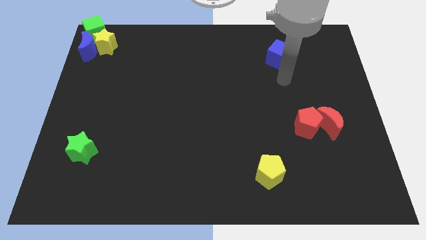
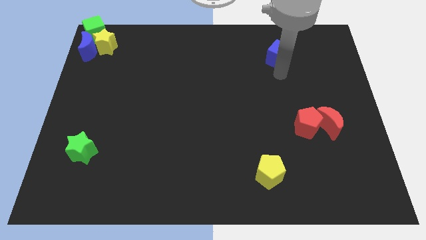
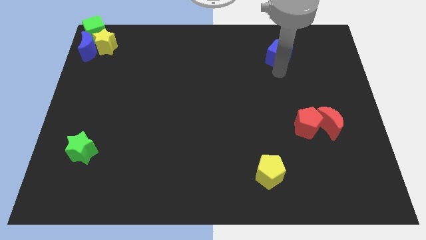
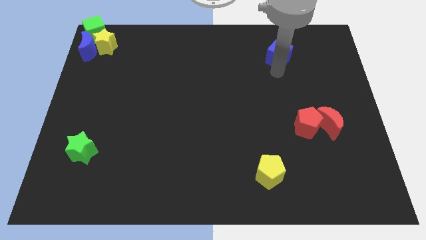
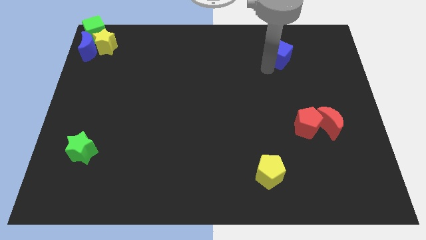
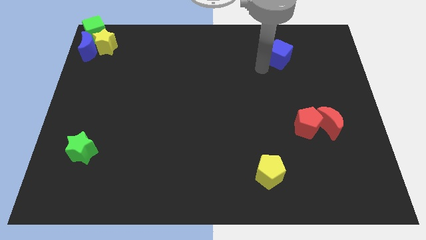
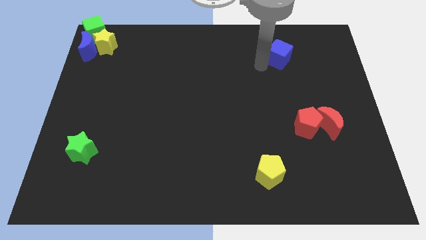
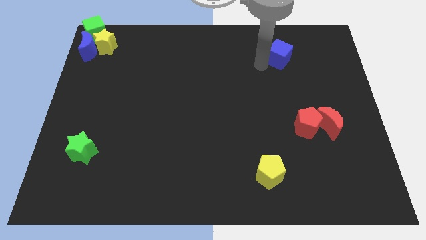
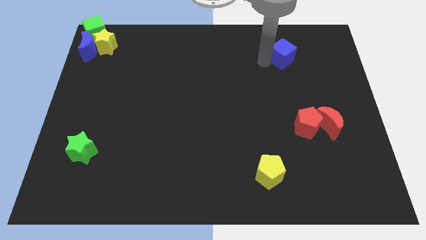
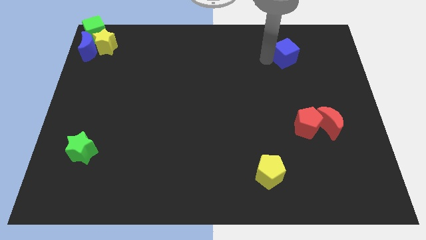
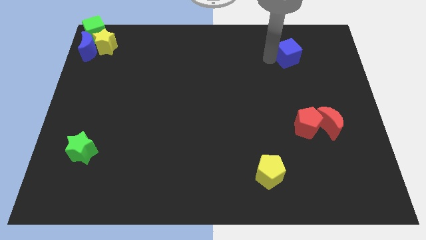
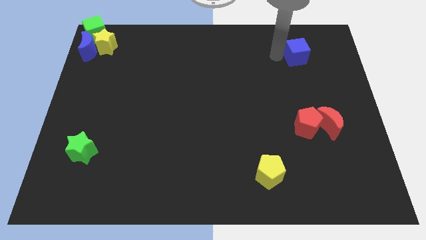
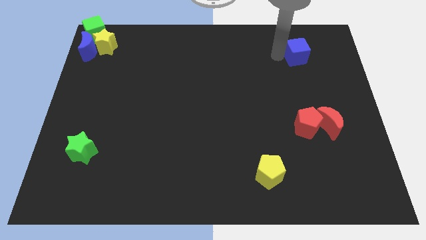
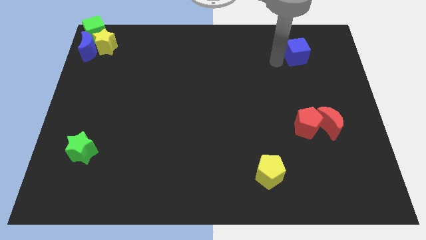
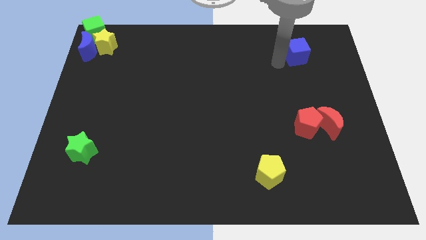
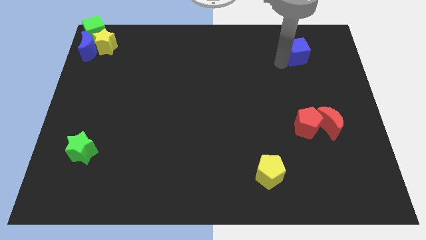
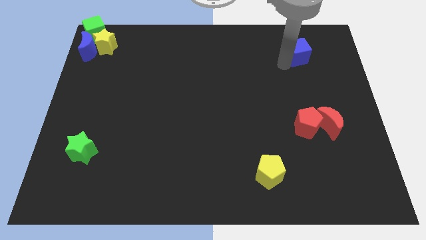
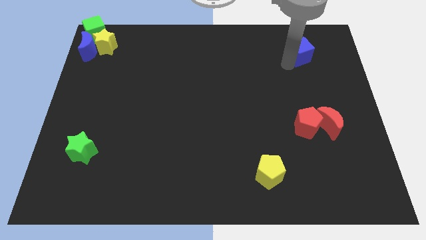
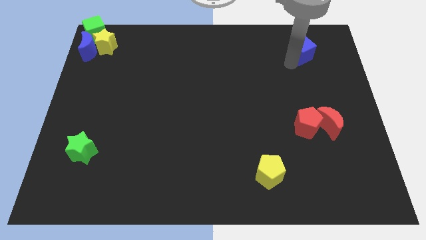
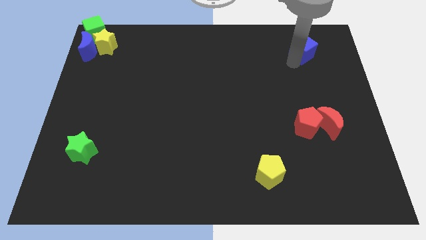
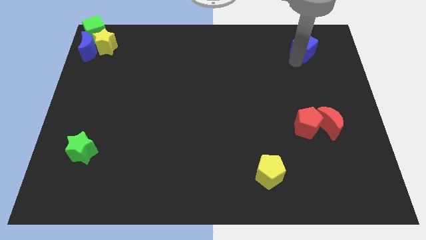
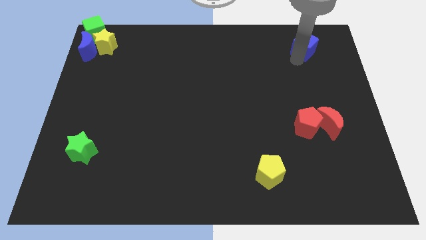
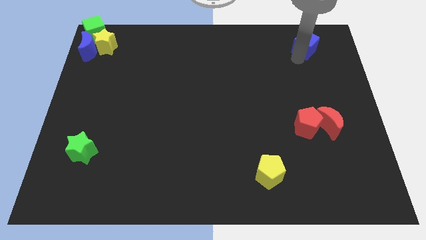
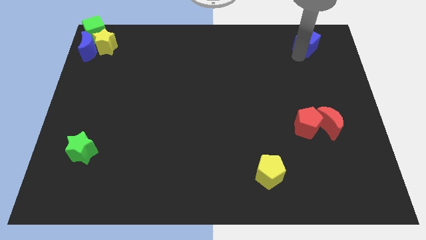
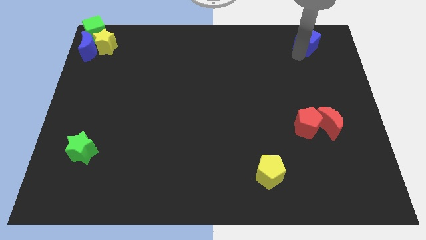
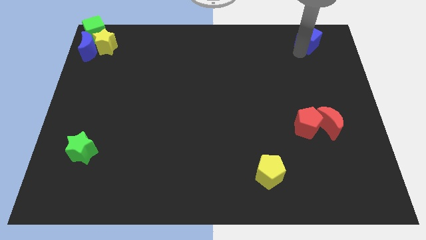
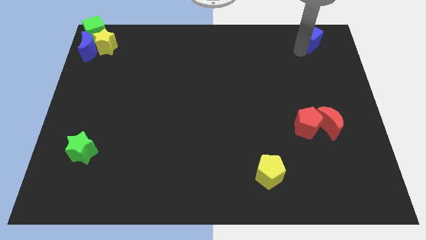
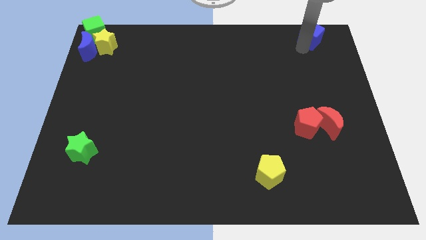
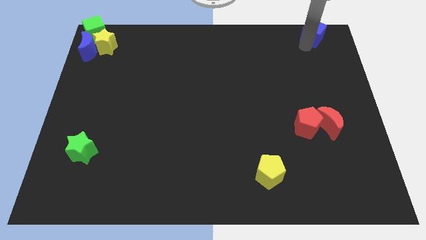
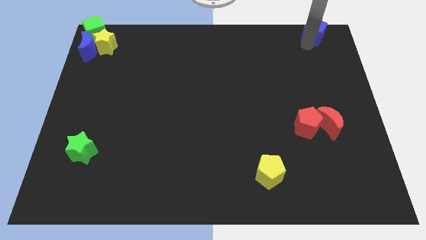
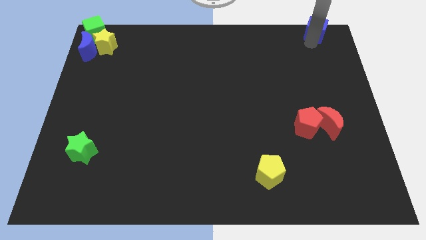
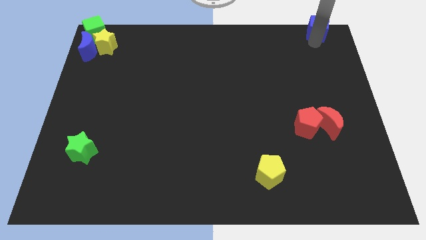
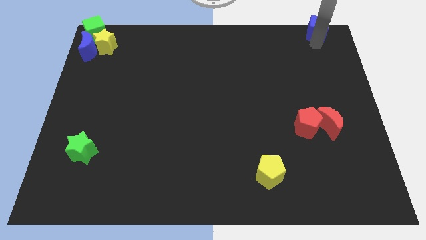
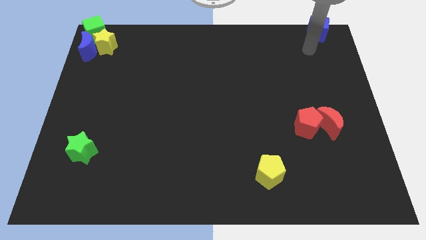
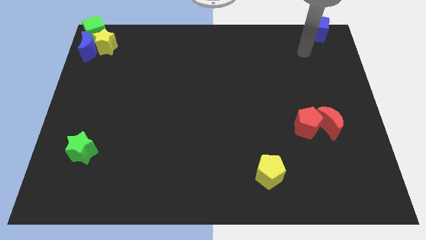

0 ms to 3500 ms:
push the blue cube to the top right of the board

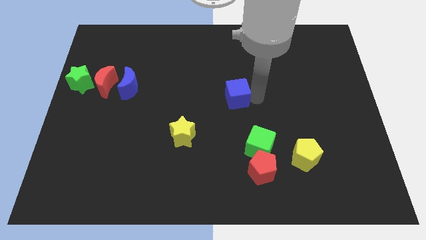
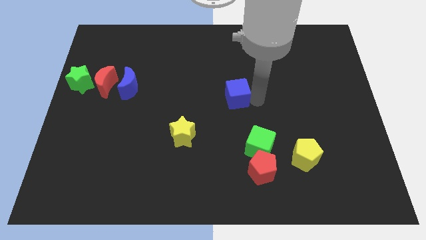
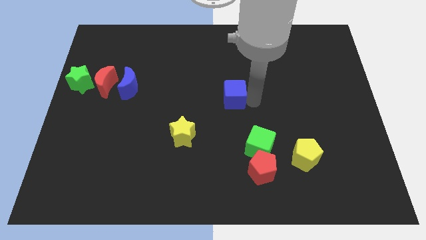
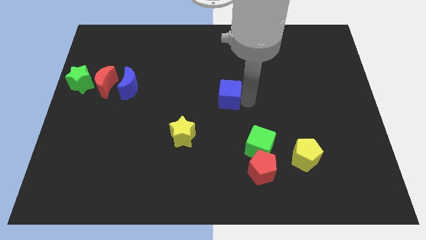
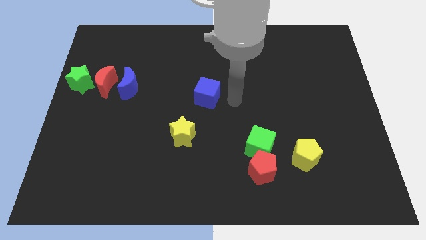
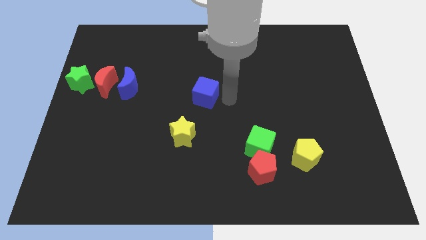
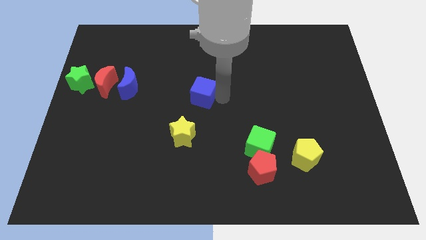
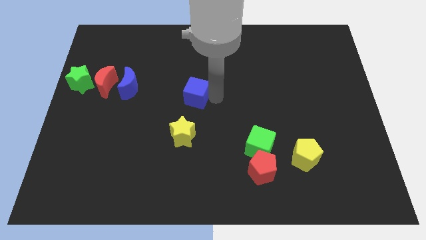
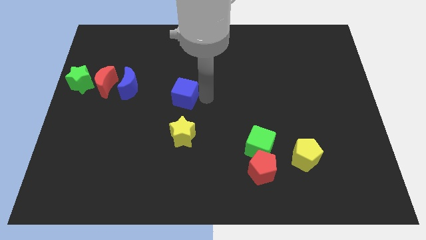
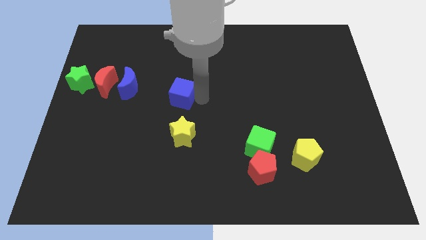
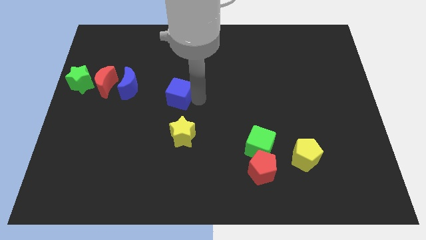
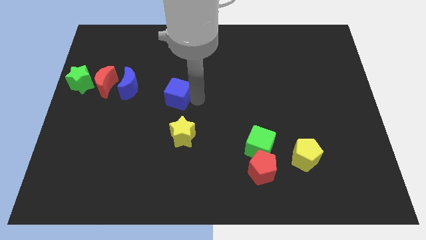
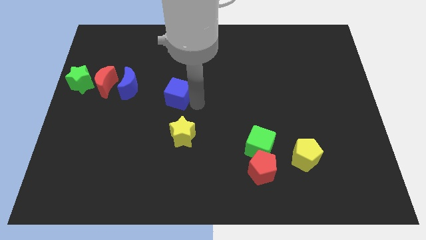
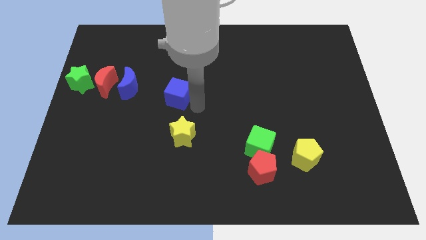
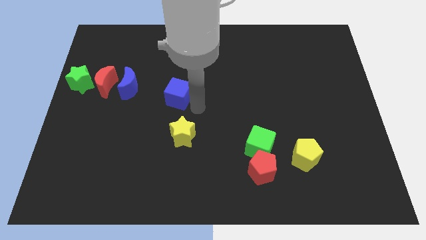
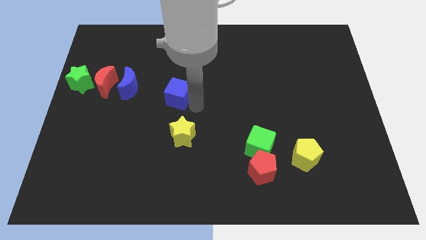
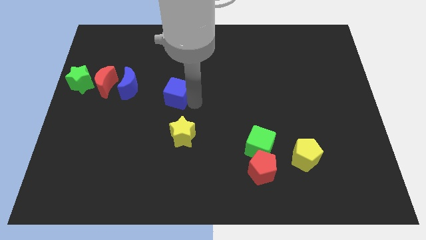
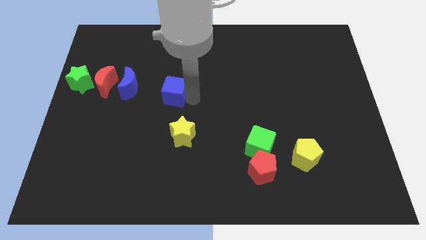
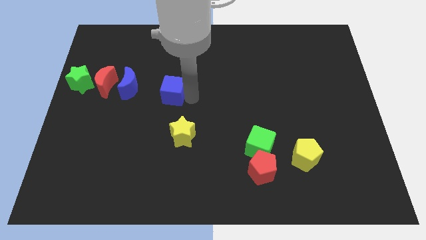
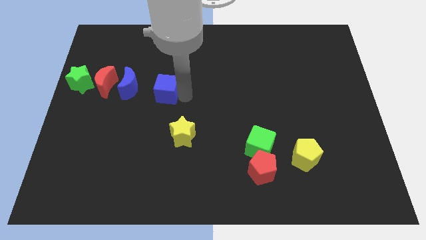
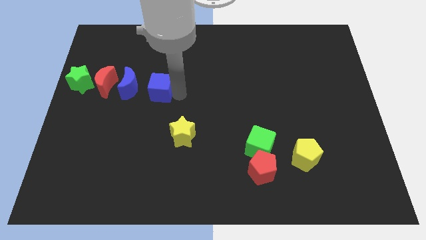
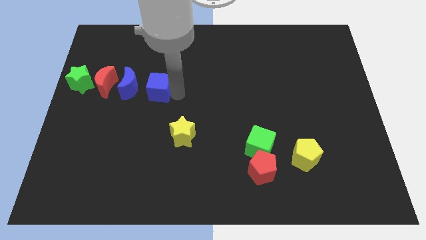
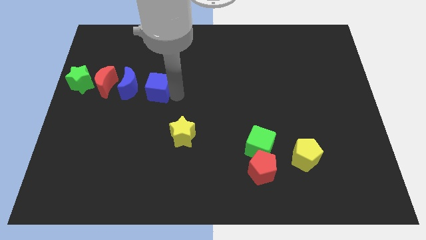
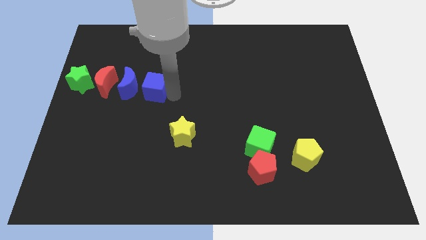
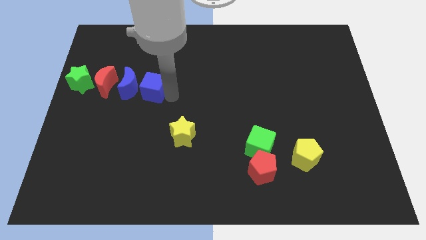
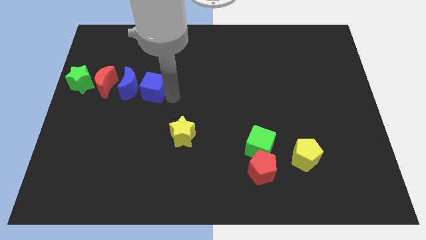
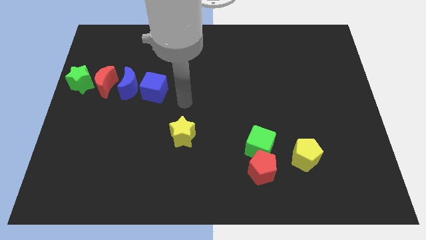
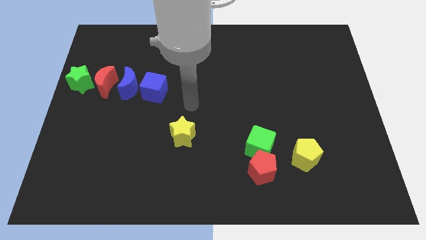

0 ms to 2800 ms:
push the blue cube to the right side of the blue moon

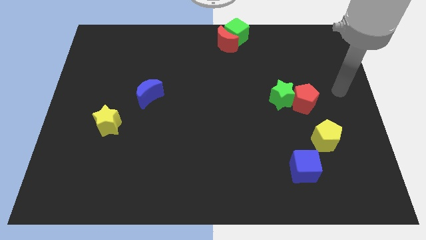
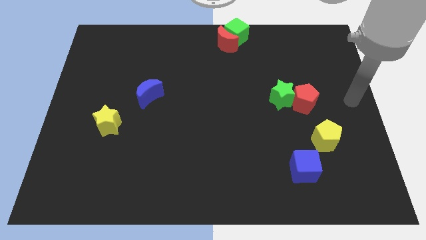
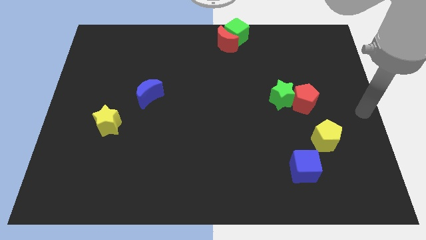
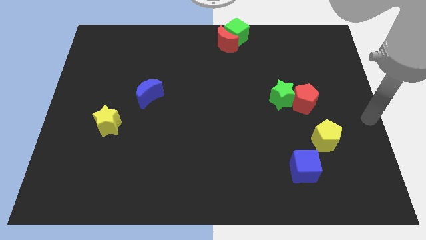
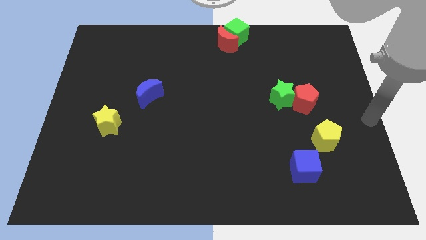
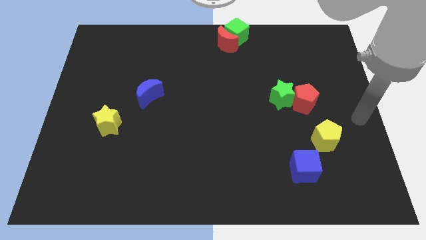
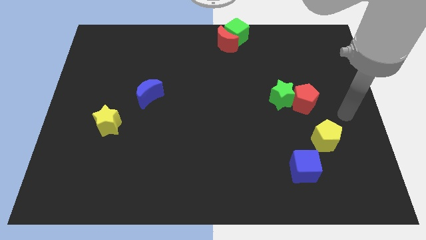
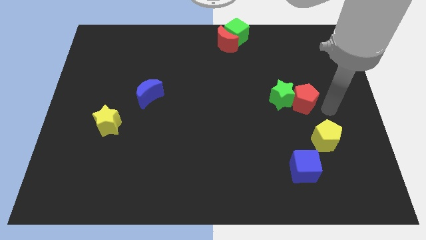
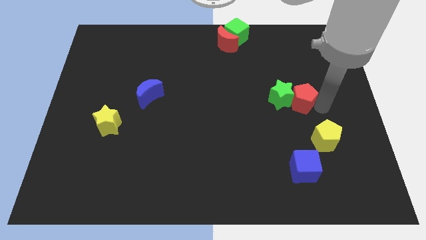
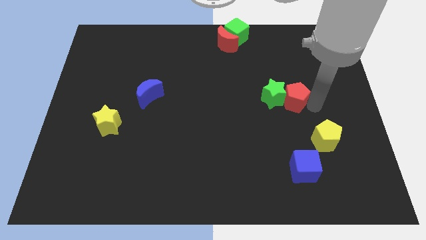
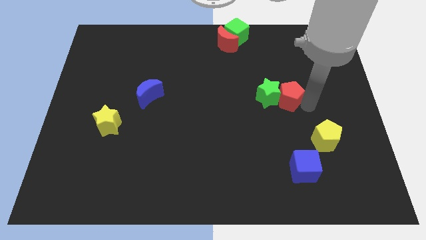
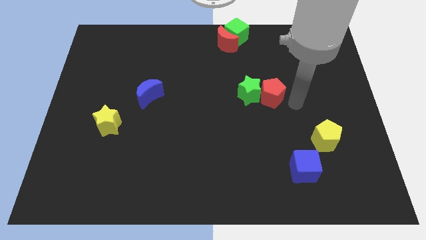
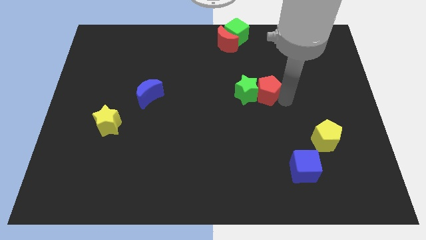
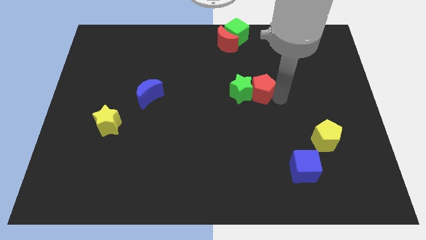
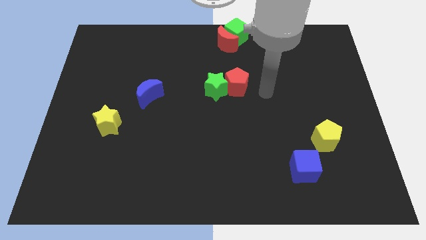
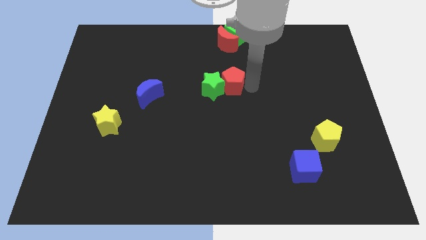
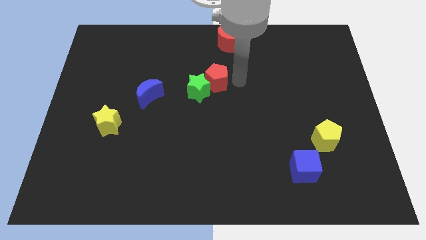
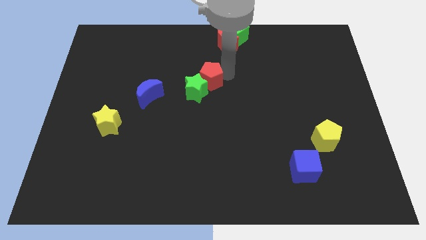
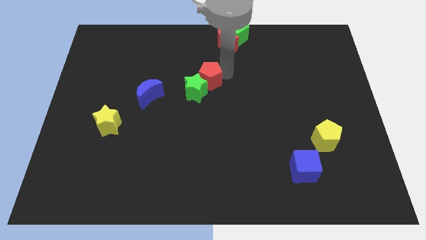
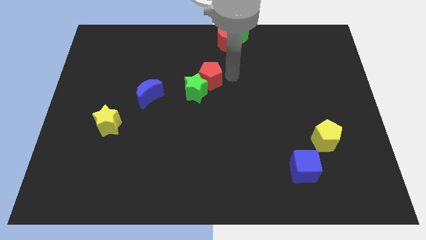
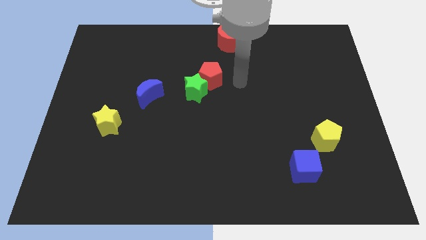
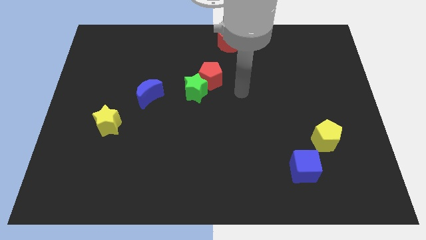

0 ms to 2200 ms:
move the green star and red pentagon adjacent to blue moon

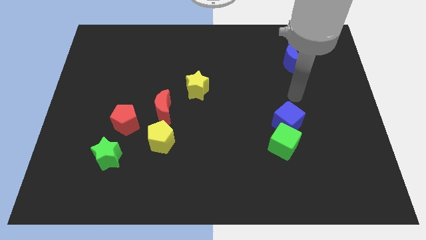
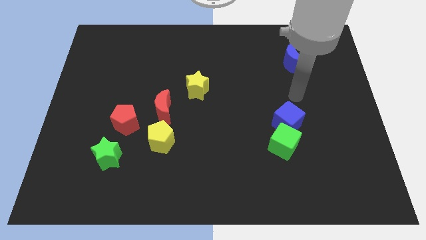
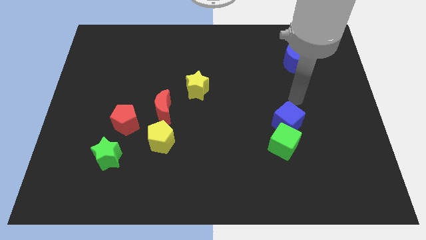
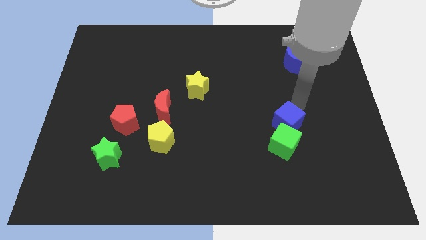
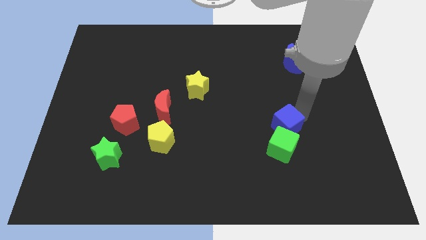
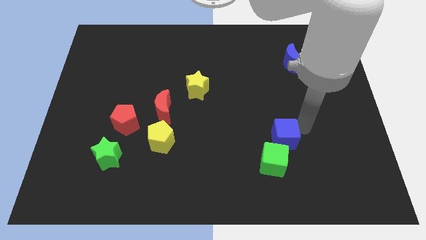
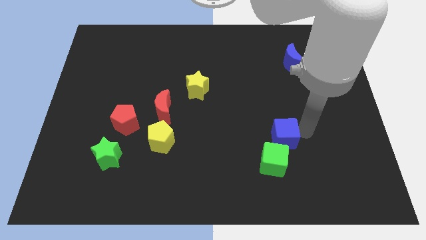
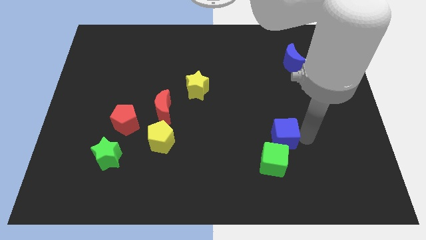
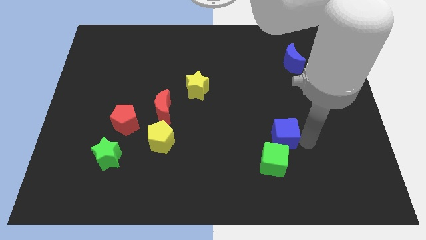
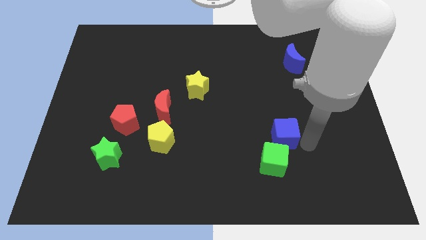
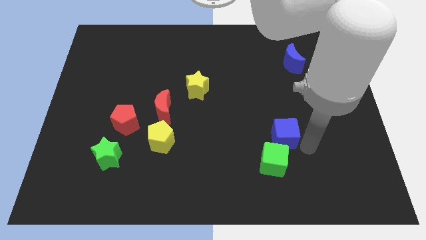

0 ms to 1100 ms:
push the blue cube along with green cube slightly towards down
